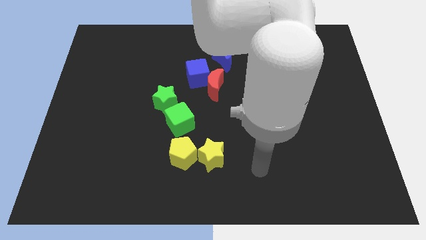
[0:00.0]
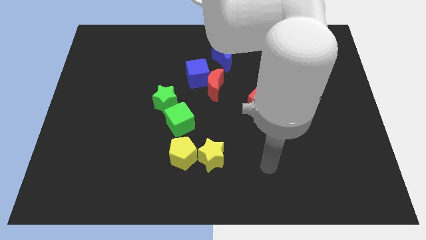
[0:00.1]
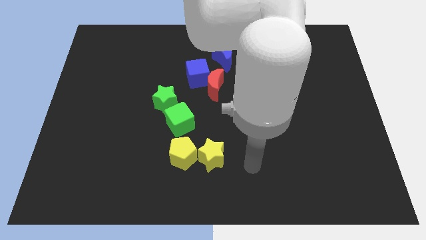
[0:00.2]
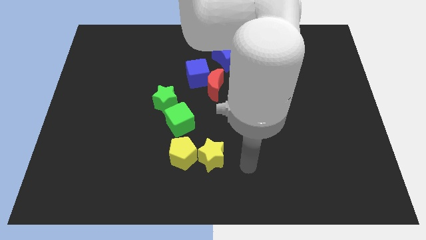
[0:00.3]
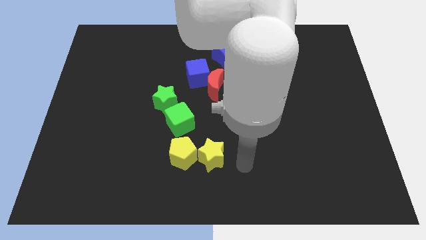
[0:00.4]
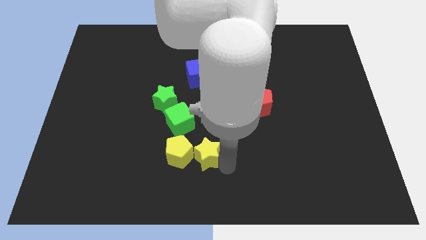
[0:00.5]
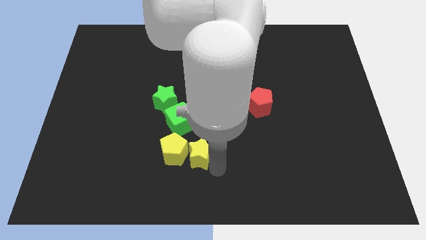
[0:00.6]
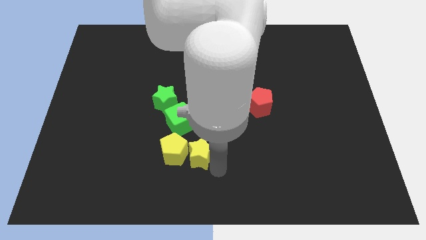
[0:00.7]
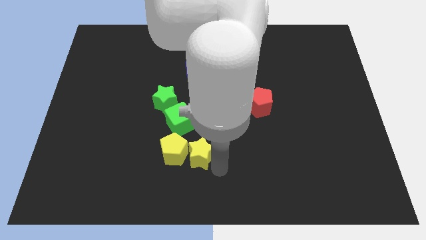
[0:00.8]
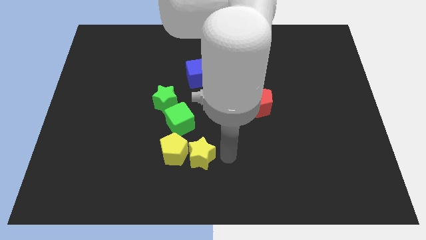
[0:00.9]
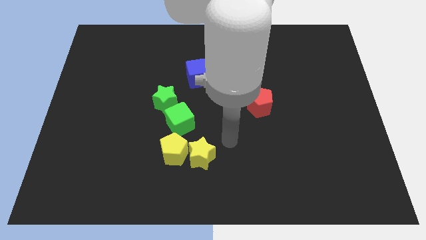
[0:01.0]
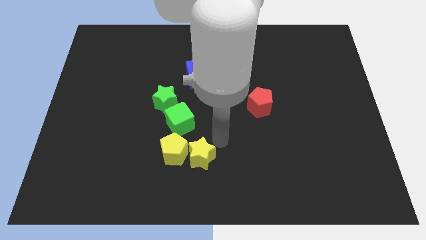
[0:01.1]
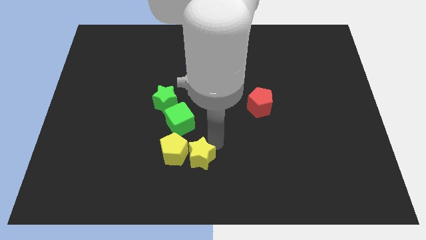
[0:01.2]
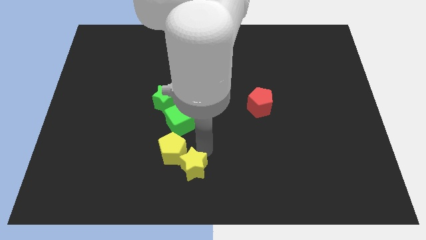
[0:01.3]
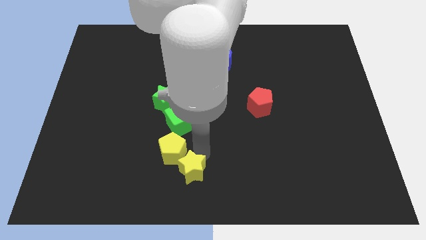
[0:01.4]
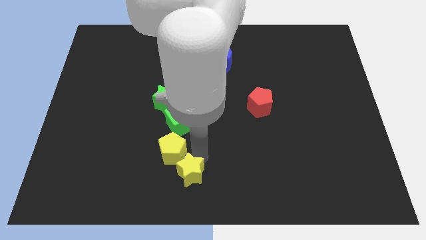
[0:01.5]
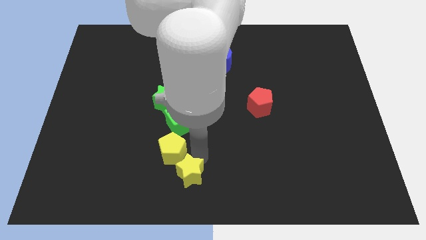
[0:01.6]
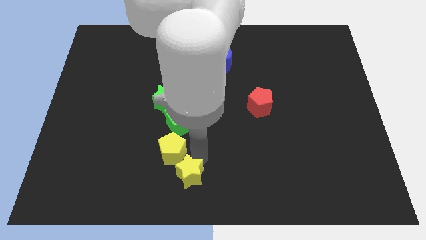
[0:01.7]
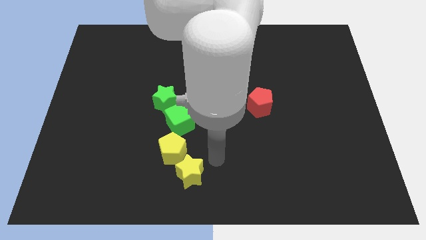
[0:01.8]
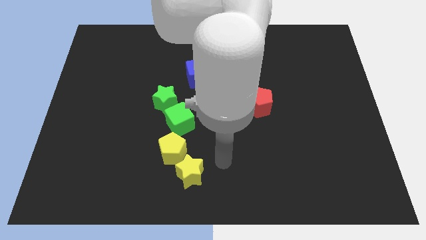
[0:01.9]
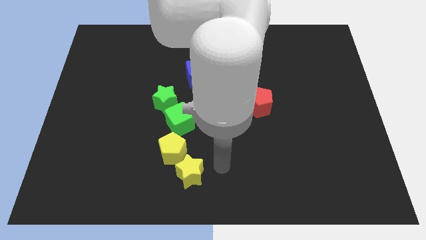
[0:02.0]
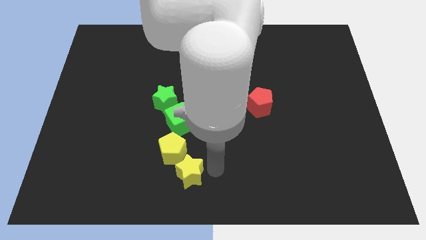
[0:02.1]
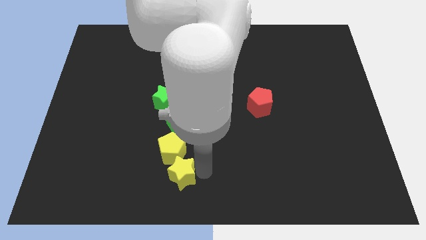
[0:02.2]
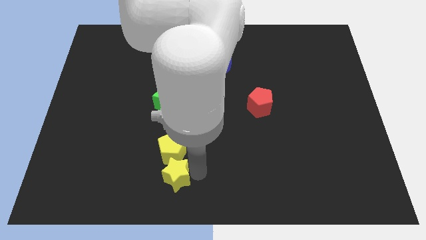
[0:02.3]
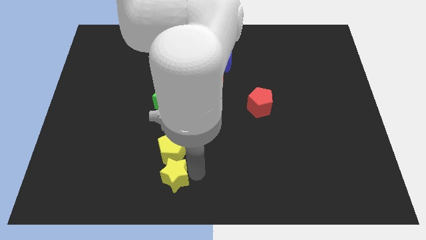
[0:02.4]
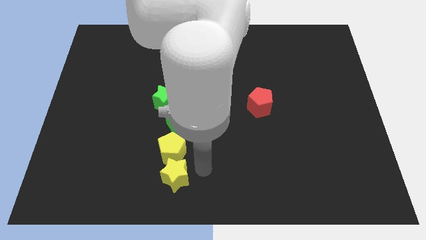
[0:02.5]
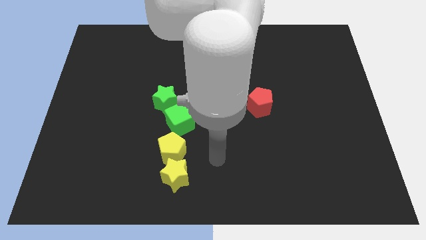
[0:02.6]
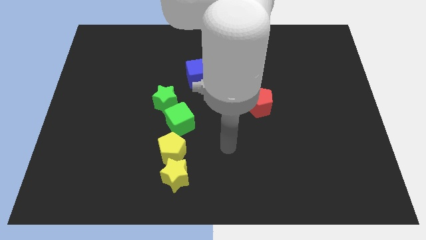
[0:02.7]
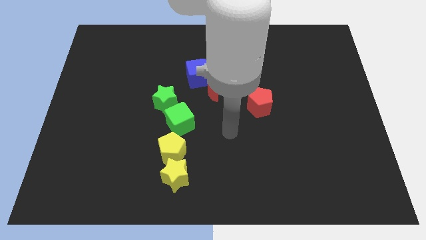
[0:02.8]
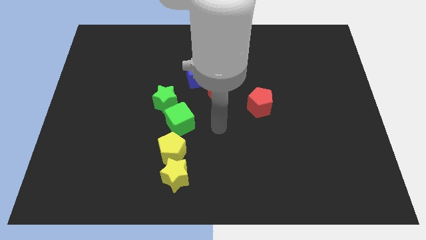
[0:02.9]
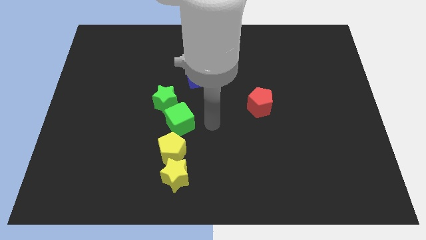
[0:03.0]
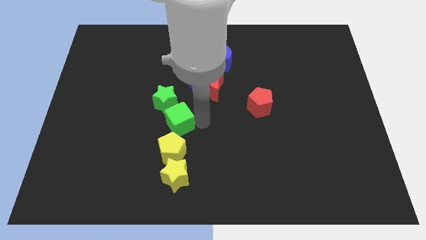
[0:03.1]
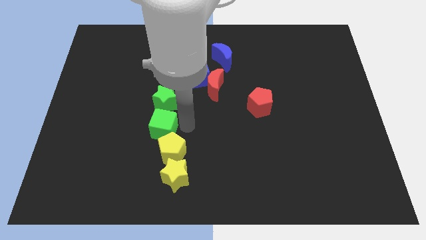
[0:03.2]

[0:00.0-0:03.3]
place the yellow star under the yellow pentagon

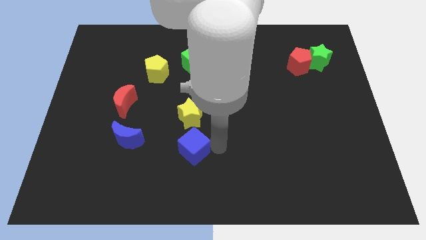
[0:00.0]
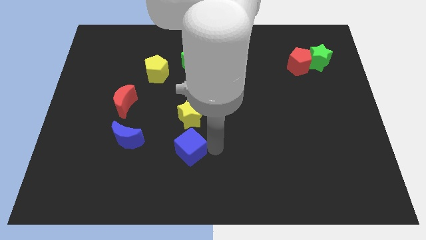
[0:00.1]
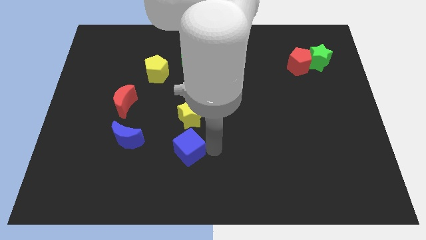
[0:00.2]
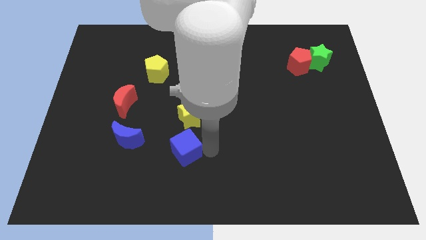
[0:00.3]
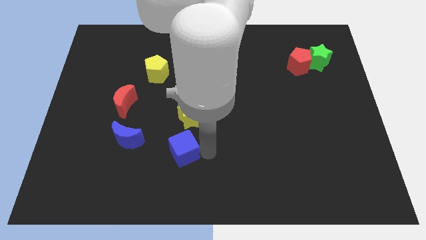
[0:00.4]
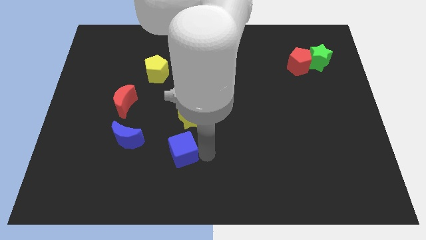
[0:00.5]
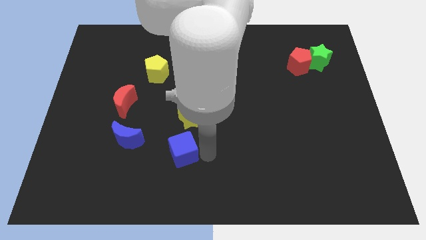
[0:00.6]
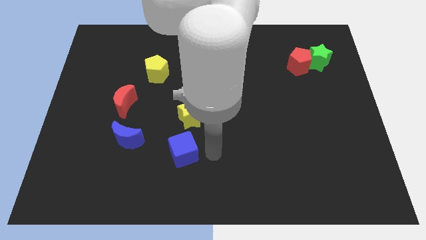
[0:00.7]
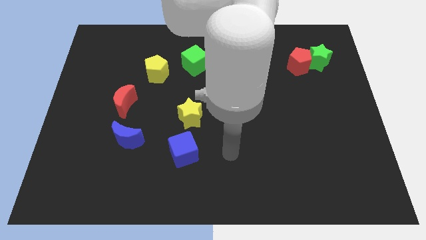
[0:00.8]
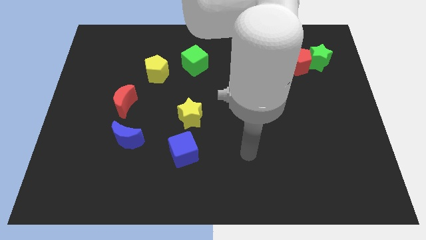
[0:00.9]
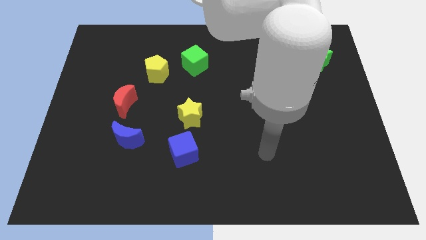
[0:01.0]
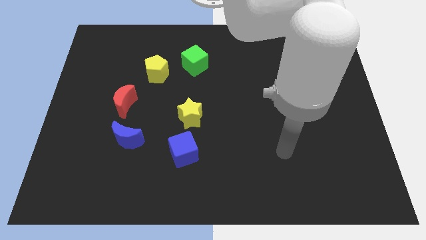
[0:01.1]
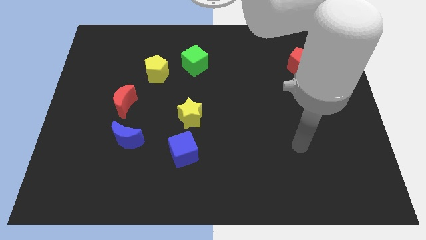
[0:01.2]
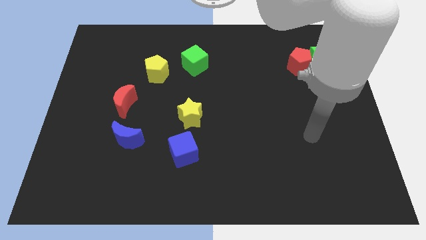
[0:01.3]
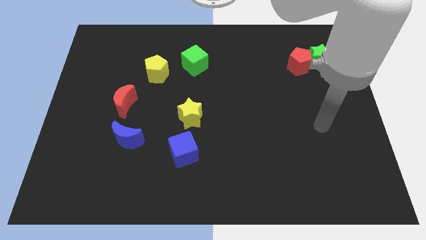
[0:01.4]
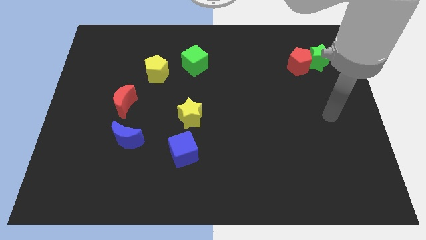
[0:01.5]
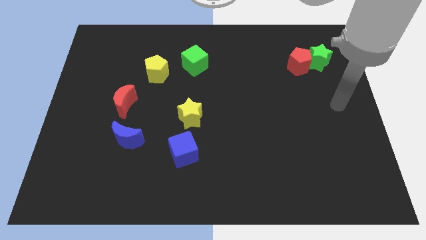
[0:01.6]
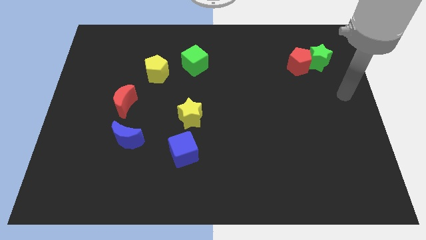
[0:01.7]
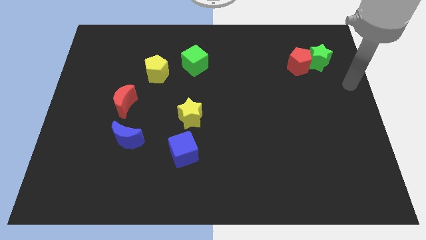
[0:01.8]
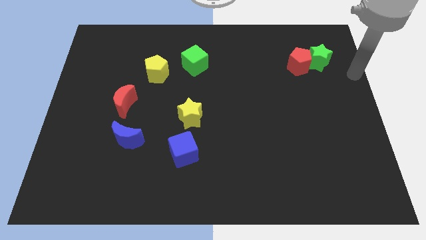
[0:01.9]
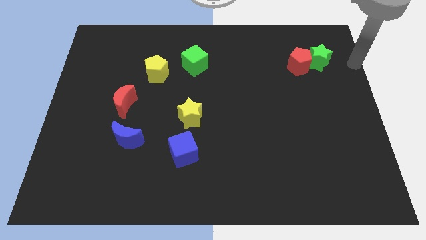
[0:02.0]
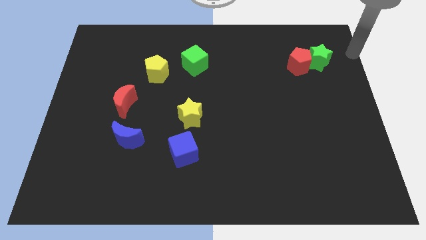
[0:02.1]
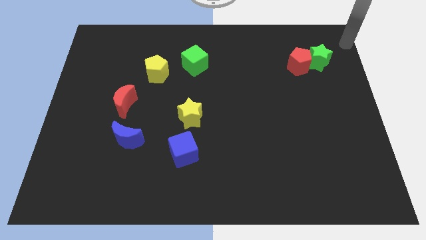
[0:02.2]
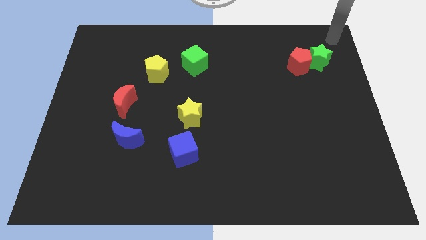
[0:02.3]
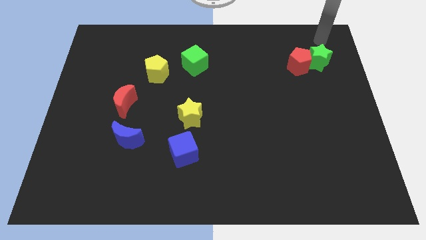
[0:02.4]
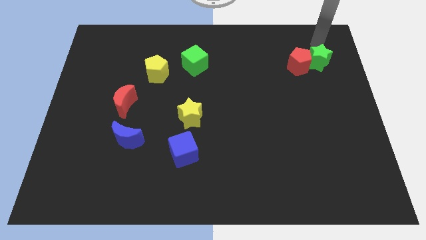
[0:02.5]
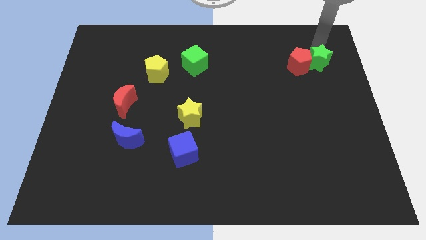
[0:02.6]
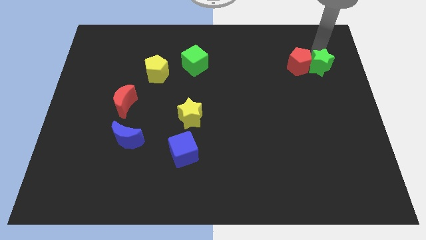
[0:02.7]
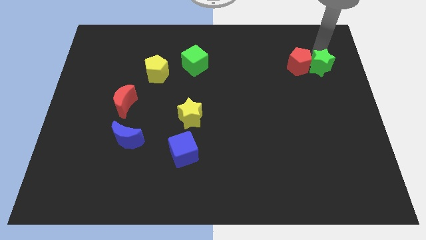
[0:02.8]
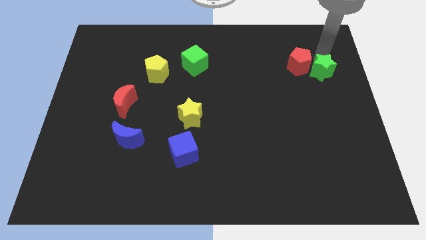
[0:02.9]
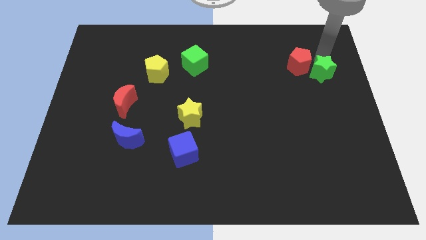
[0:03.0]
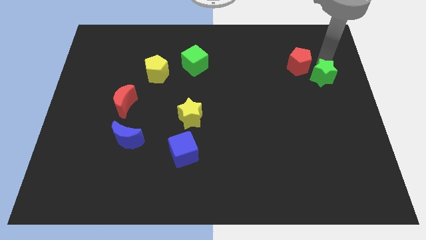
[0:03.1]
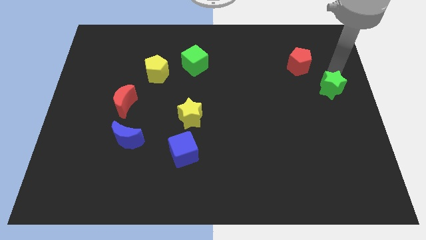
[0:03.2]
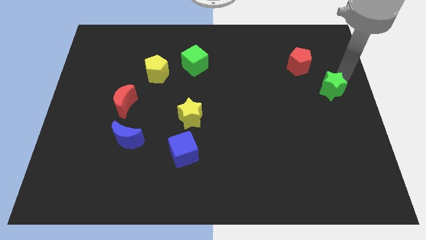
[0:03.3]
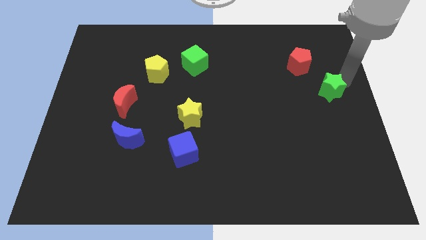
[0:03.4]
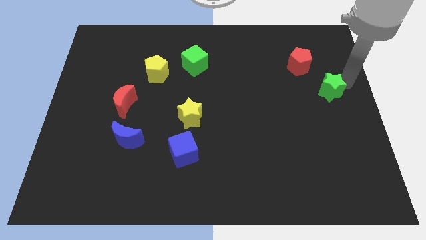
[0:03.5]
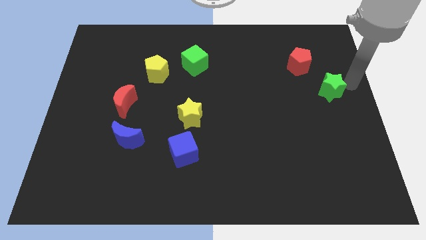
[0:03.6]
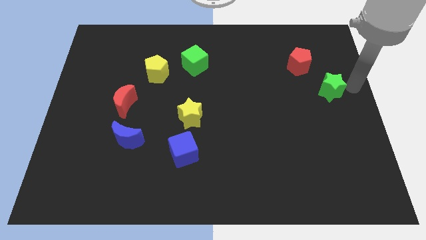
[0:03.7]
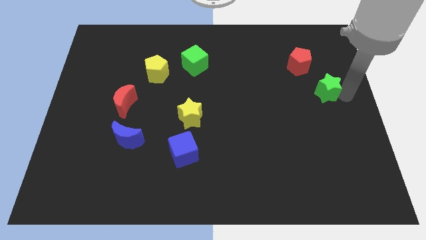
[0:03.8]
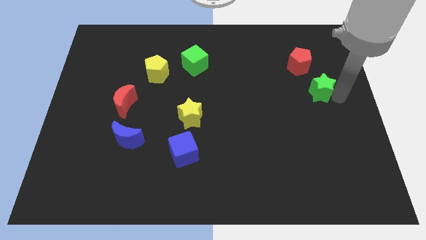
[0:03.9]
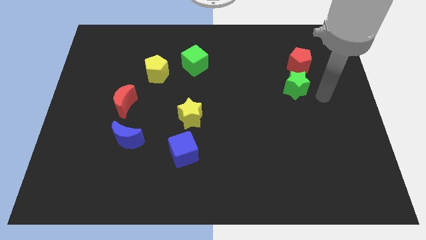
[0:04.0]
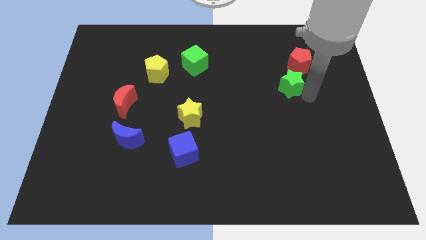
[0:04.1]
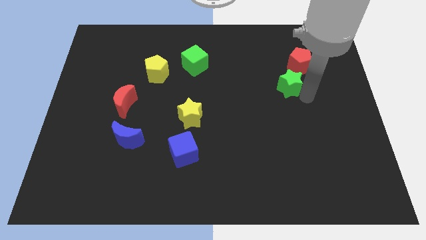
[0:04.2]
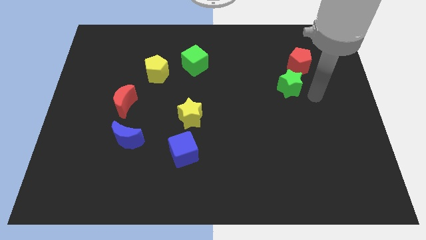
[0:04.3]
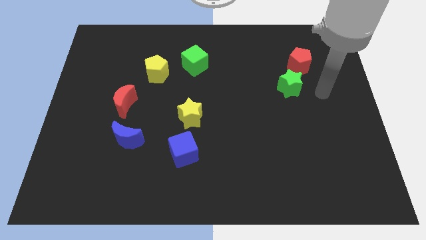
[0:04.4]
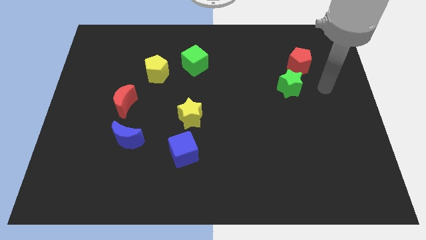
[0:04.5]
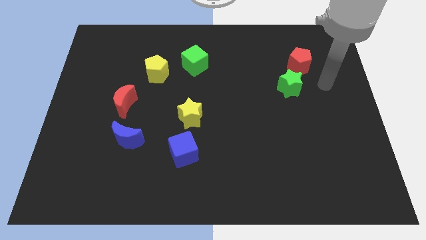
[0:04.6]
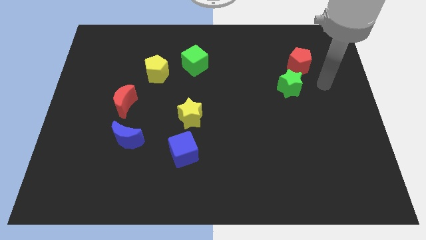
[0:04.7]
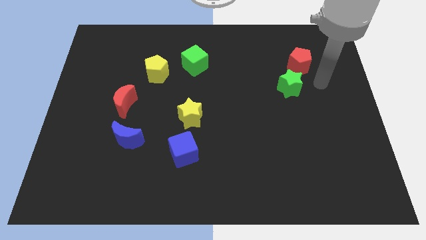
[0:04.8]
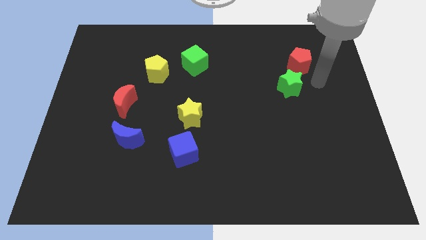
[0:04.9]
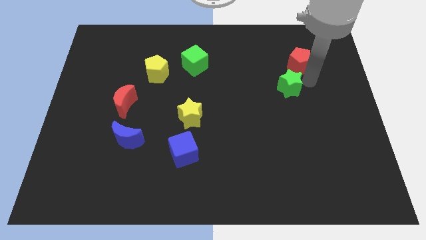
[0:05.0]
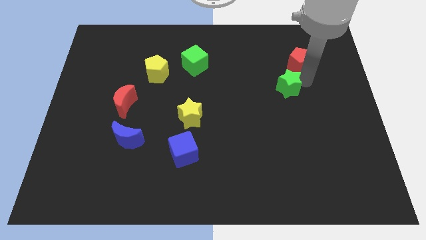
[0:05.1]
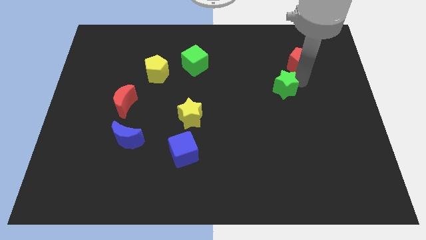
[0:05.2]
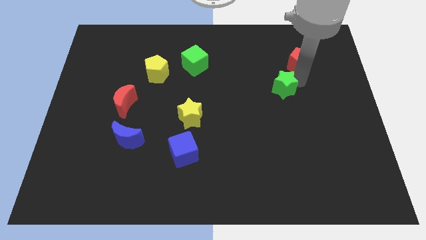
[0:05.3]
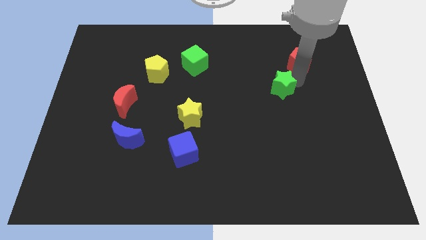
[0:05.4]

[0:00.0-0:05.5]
push the blue cube and green star to the left side
